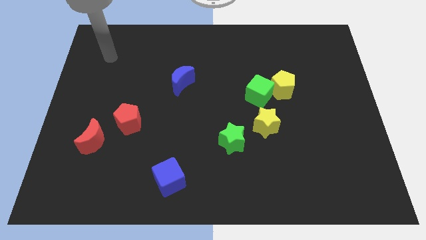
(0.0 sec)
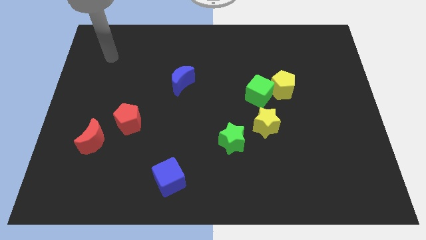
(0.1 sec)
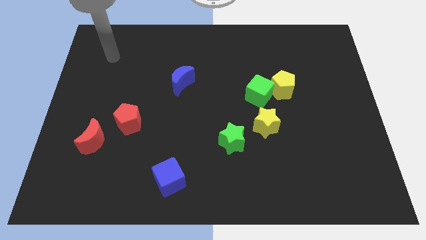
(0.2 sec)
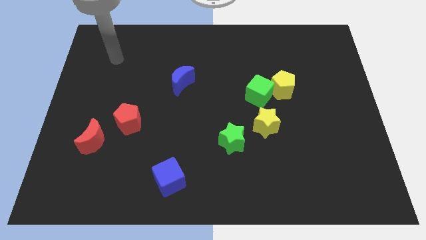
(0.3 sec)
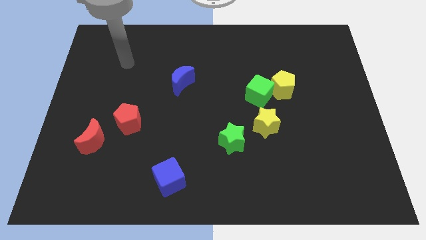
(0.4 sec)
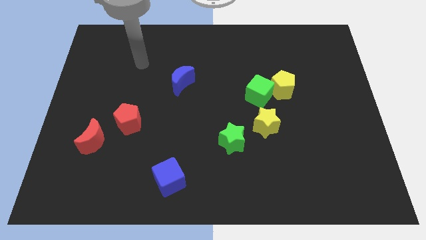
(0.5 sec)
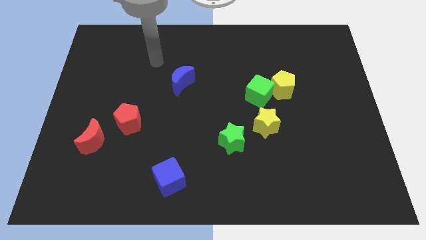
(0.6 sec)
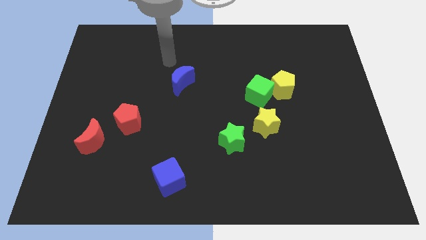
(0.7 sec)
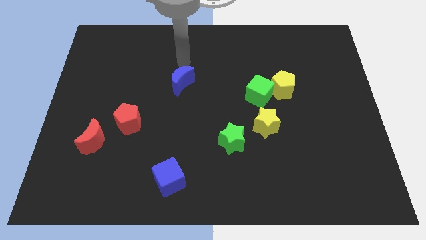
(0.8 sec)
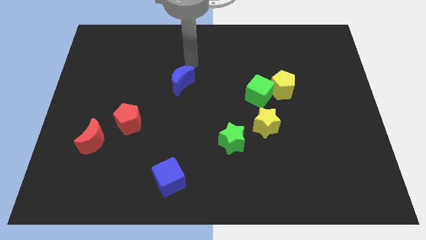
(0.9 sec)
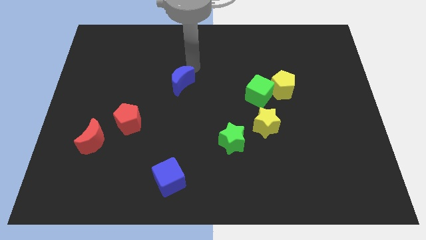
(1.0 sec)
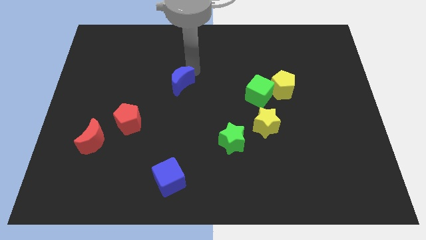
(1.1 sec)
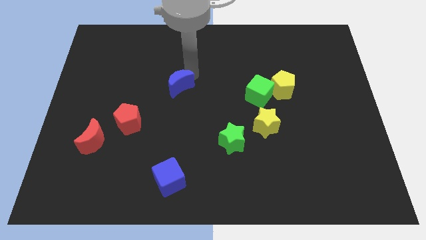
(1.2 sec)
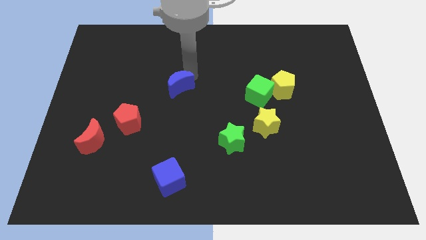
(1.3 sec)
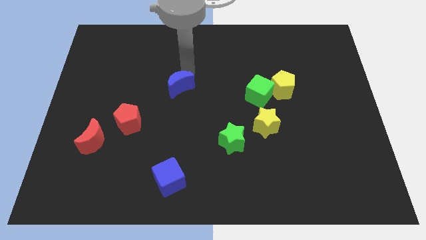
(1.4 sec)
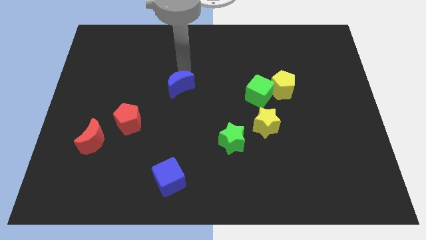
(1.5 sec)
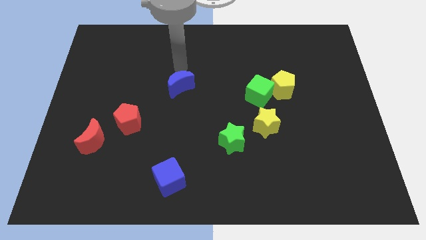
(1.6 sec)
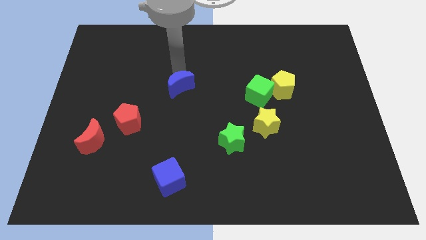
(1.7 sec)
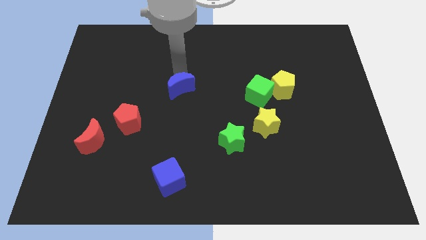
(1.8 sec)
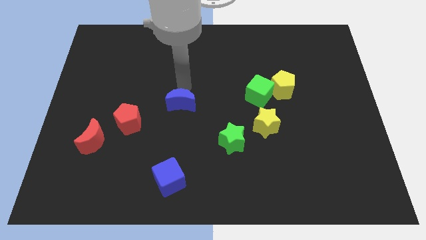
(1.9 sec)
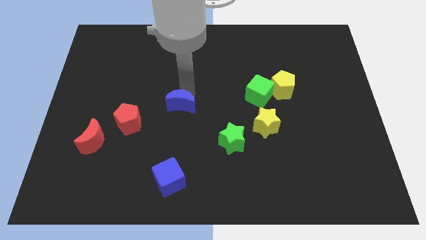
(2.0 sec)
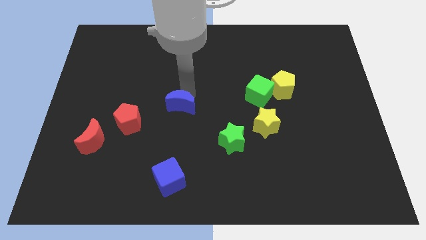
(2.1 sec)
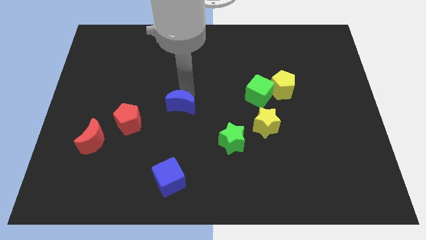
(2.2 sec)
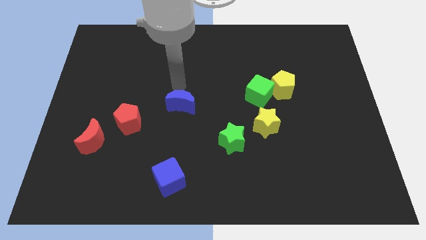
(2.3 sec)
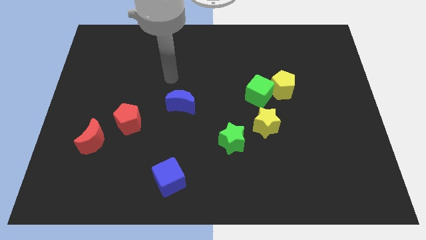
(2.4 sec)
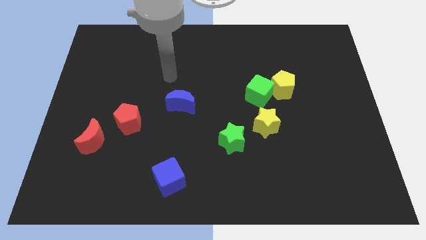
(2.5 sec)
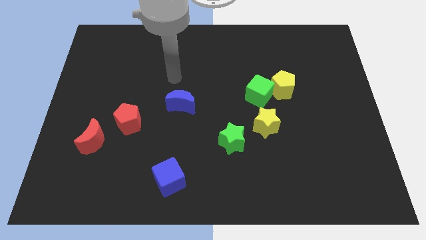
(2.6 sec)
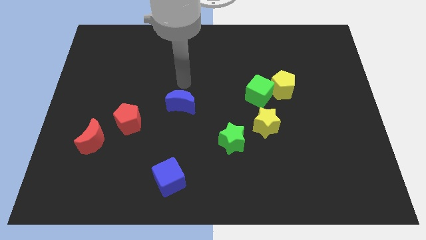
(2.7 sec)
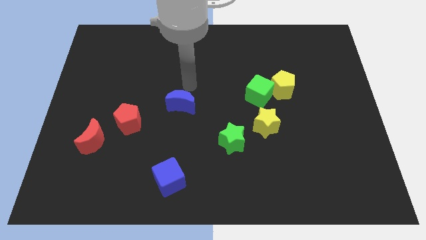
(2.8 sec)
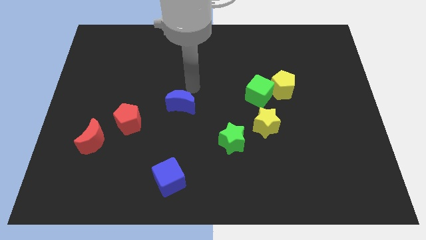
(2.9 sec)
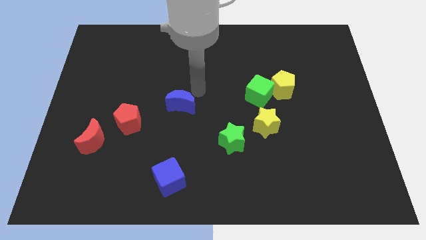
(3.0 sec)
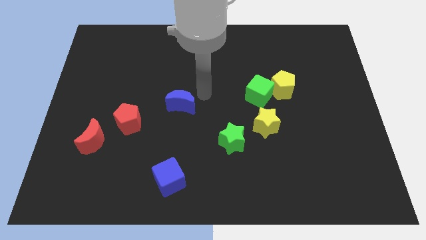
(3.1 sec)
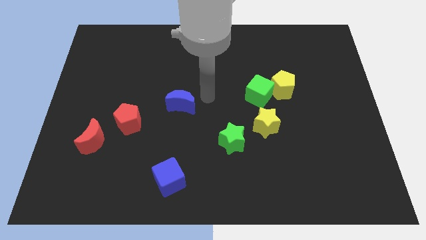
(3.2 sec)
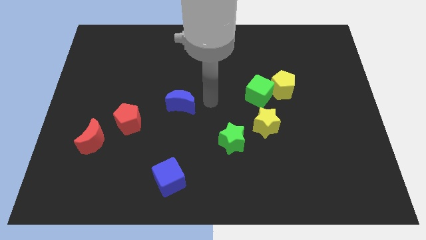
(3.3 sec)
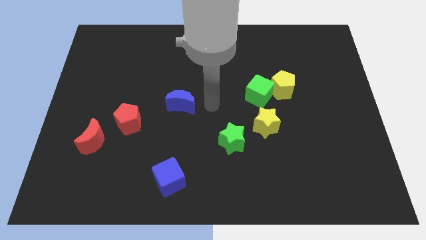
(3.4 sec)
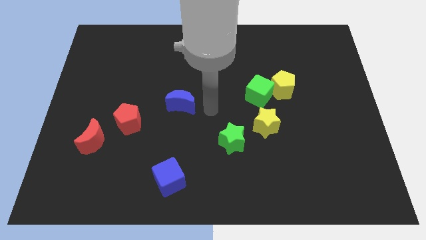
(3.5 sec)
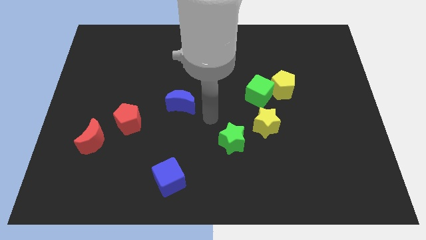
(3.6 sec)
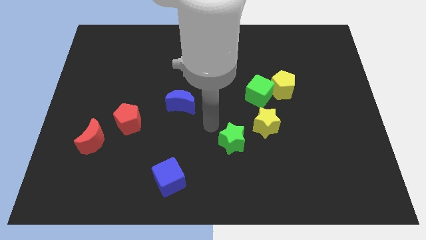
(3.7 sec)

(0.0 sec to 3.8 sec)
push blue moon towards middle of the board

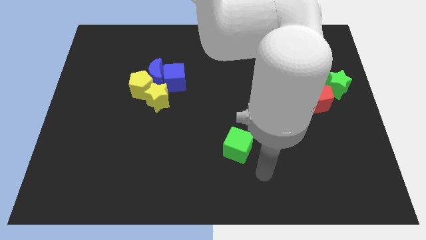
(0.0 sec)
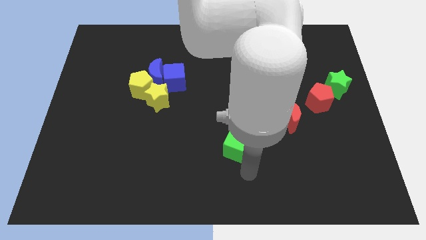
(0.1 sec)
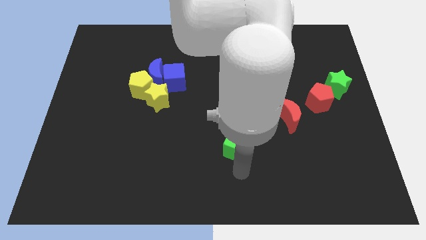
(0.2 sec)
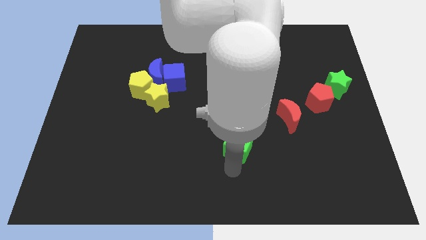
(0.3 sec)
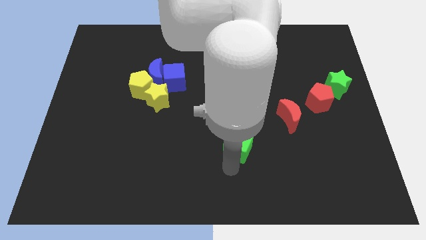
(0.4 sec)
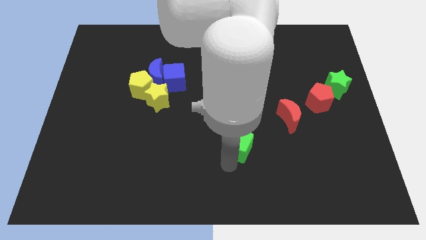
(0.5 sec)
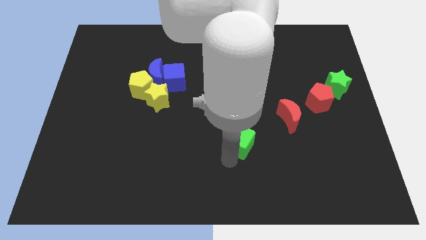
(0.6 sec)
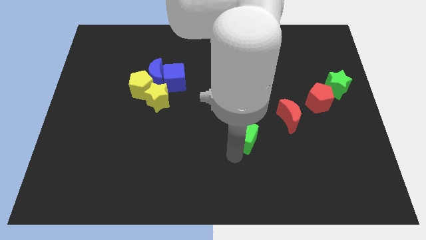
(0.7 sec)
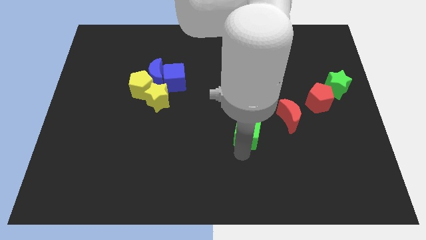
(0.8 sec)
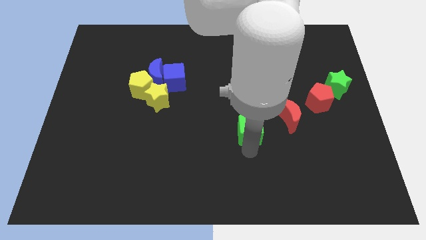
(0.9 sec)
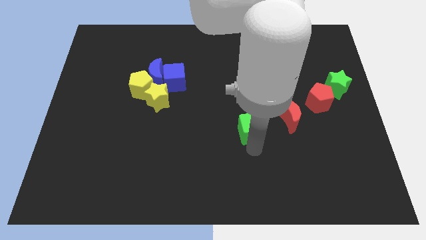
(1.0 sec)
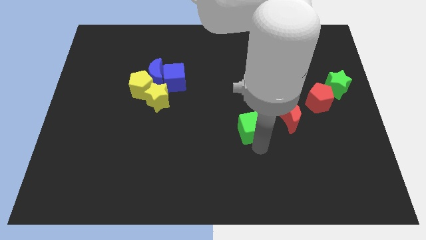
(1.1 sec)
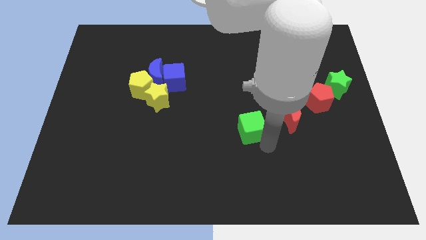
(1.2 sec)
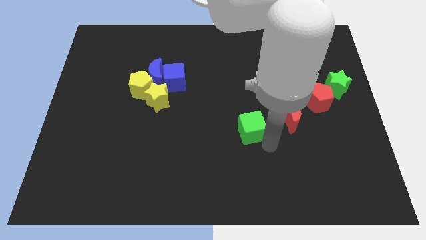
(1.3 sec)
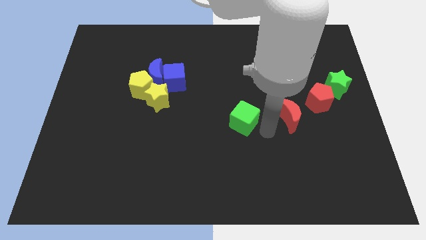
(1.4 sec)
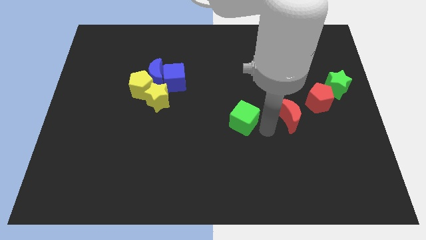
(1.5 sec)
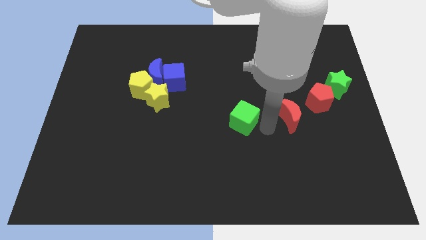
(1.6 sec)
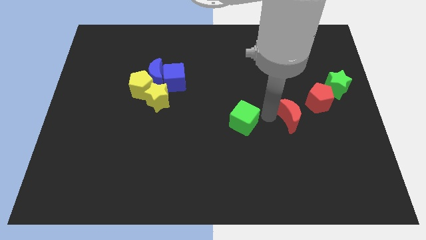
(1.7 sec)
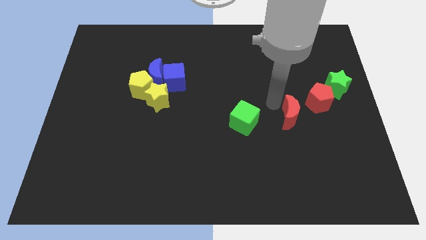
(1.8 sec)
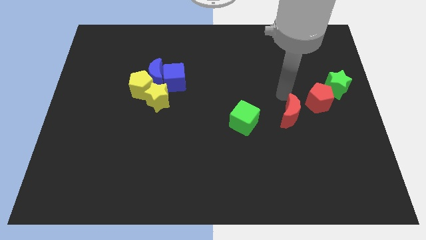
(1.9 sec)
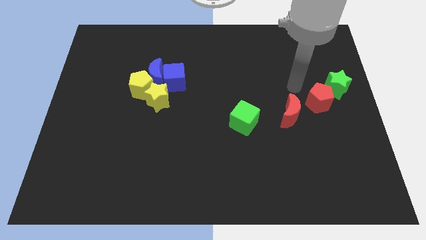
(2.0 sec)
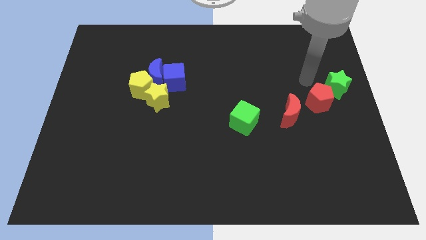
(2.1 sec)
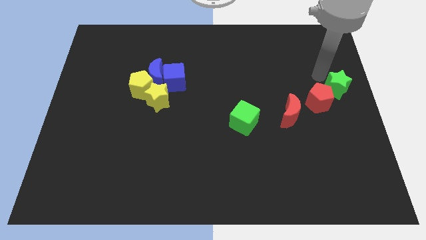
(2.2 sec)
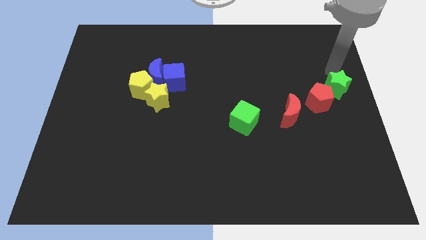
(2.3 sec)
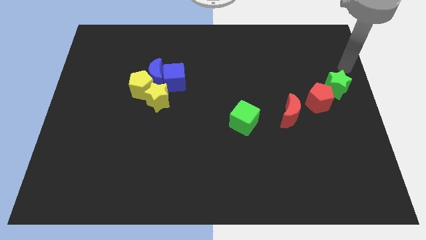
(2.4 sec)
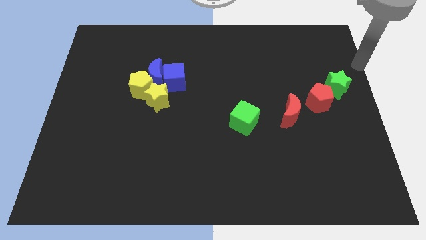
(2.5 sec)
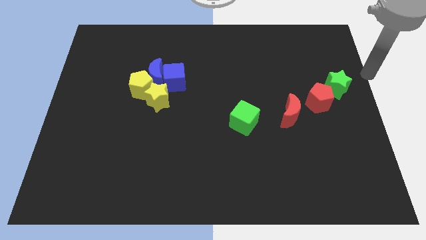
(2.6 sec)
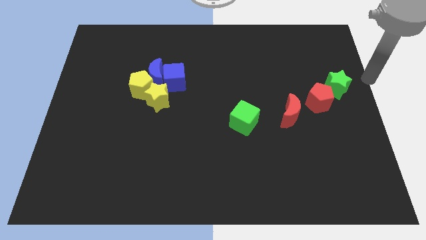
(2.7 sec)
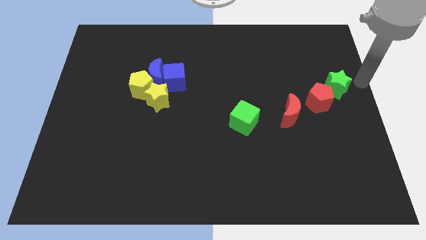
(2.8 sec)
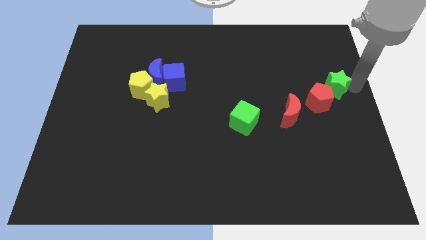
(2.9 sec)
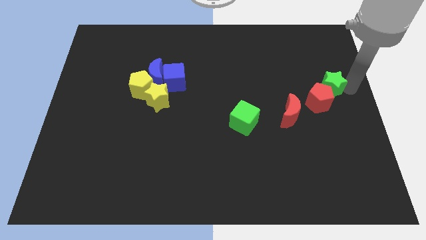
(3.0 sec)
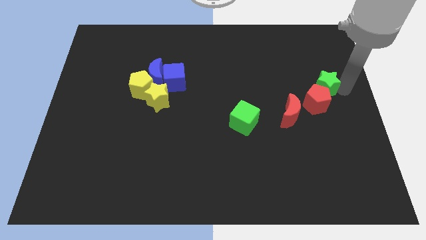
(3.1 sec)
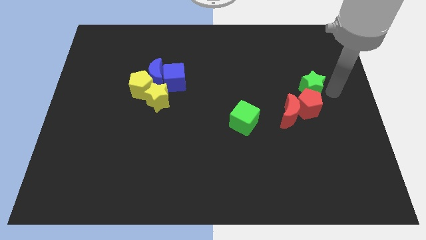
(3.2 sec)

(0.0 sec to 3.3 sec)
move the green cube to the left of the red crescent

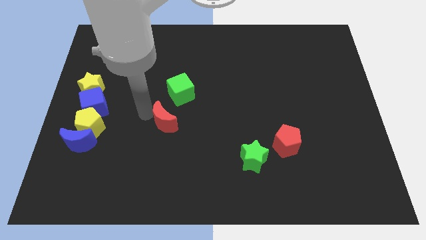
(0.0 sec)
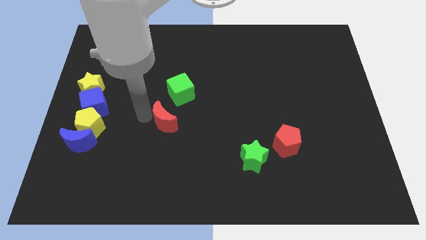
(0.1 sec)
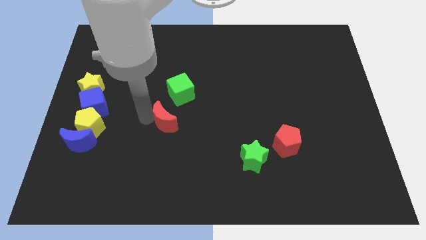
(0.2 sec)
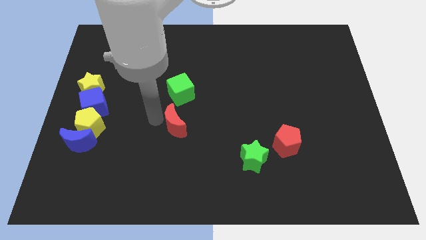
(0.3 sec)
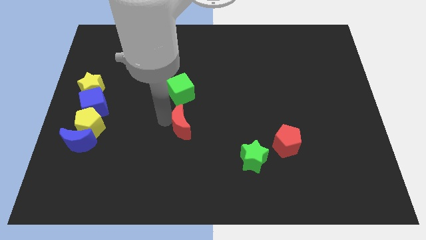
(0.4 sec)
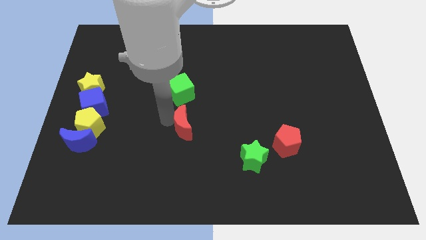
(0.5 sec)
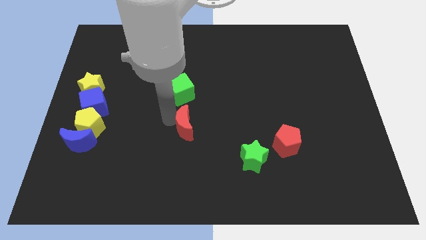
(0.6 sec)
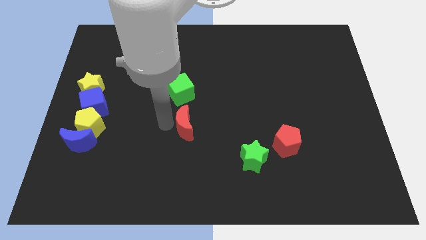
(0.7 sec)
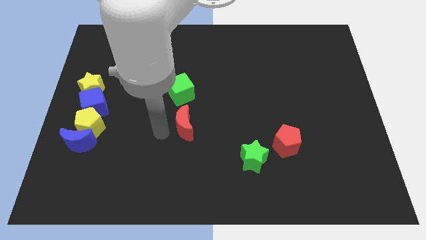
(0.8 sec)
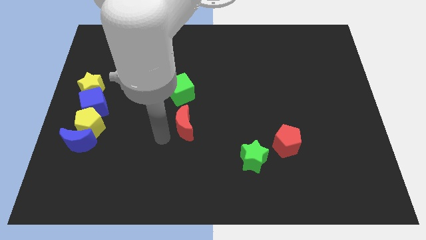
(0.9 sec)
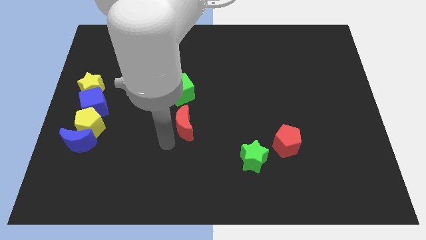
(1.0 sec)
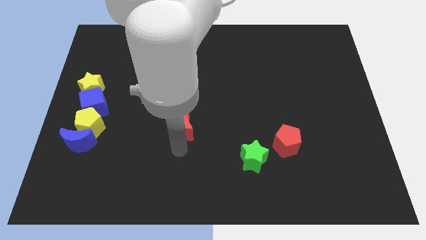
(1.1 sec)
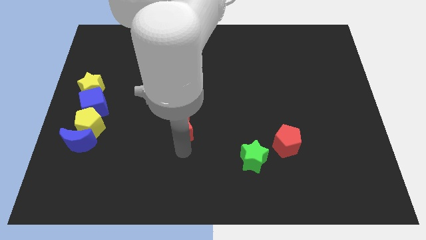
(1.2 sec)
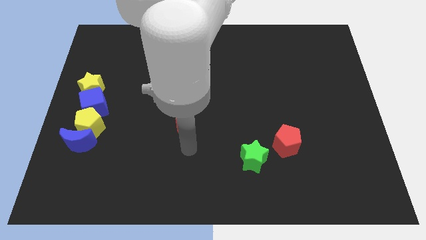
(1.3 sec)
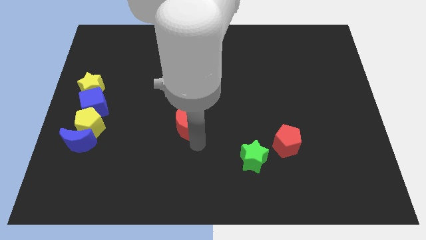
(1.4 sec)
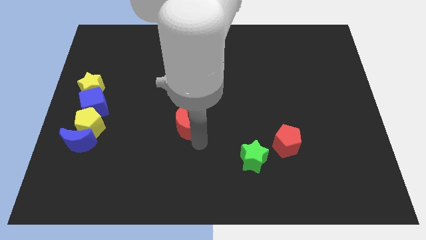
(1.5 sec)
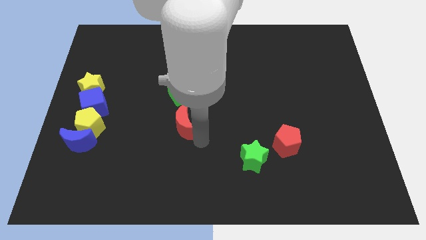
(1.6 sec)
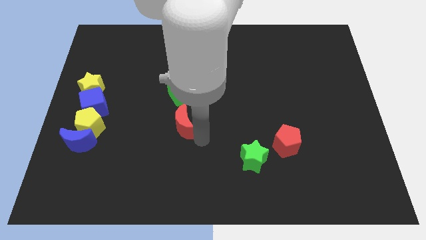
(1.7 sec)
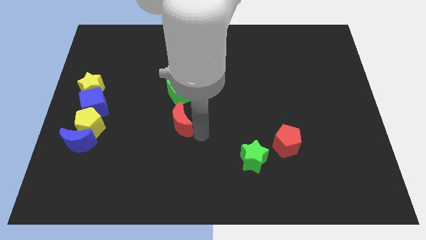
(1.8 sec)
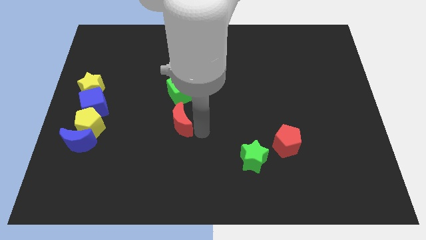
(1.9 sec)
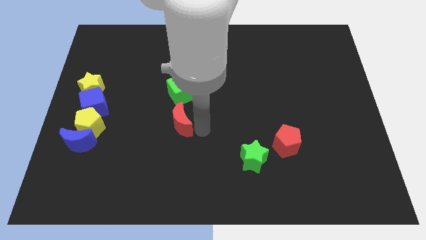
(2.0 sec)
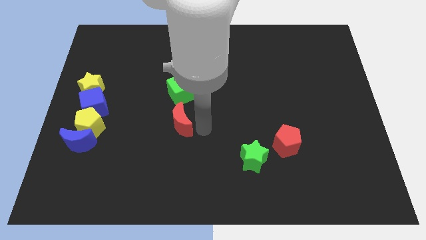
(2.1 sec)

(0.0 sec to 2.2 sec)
move the red crescent to the bottom side of the green cube
